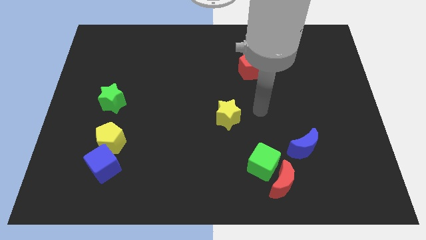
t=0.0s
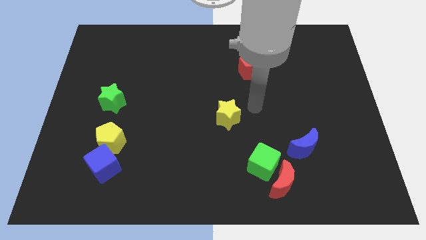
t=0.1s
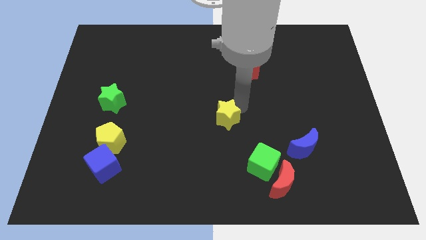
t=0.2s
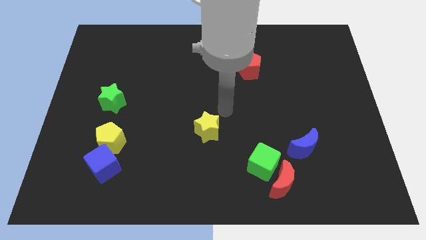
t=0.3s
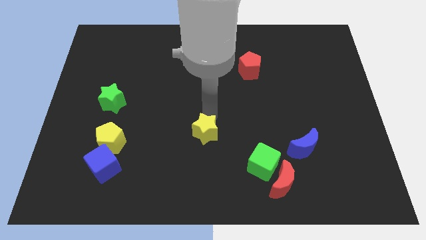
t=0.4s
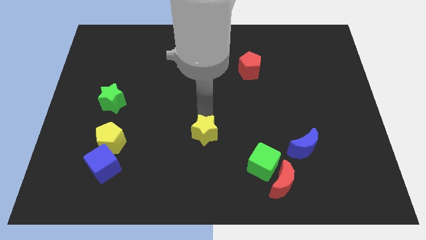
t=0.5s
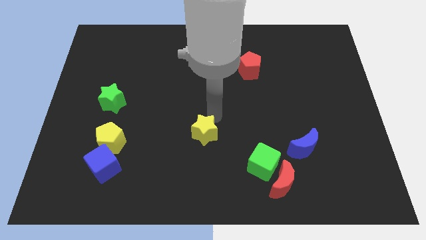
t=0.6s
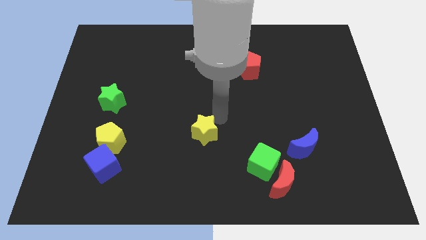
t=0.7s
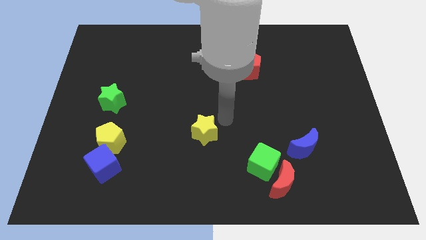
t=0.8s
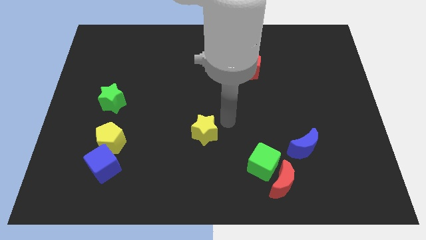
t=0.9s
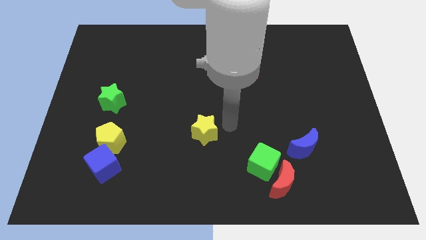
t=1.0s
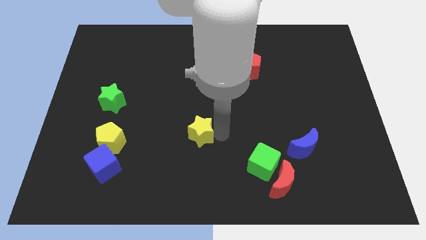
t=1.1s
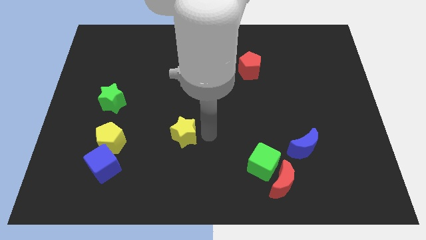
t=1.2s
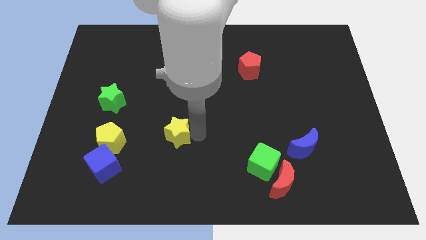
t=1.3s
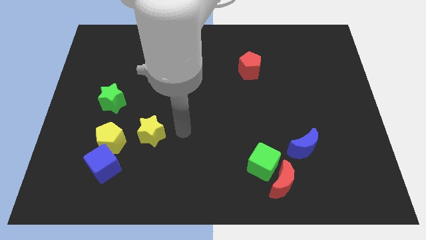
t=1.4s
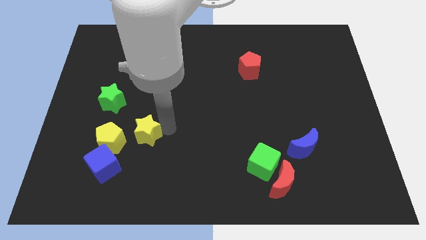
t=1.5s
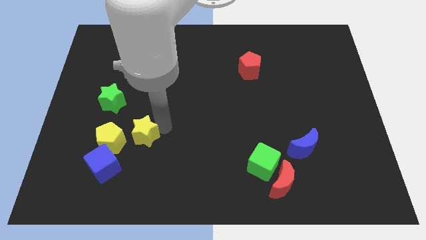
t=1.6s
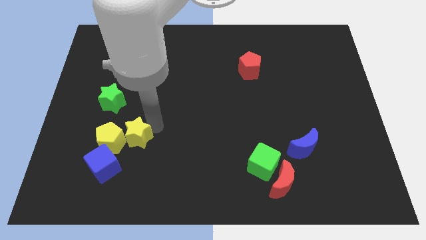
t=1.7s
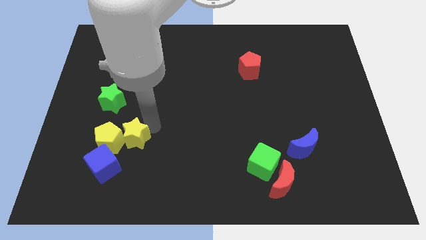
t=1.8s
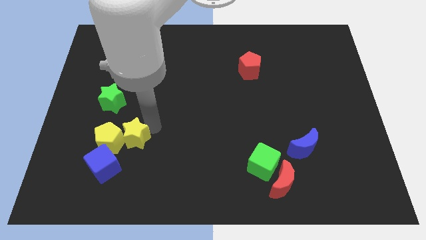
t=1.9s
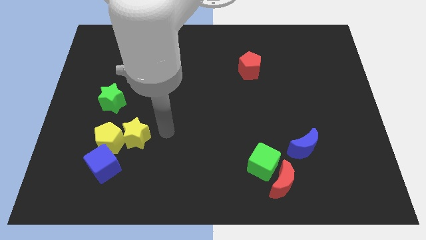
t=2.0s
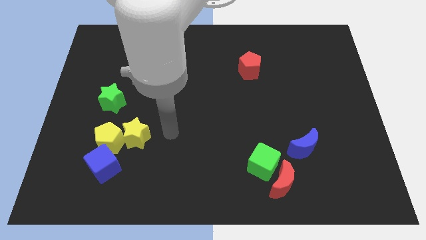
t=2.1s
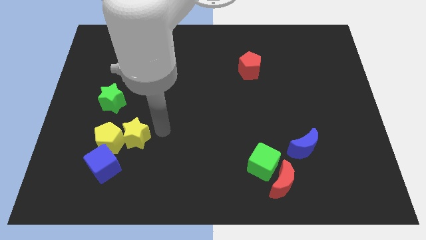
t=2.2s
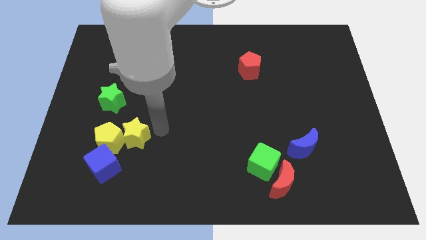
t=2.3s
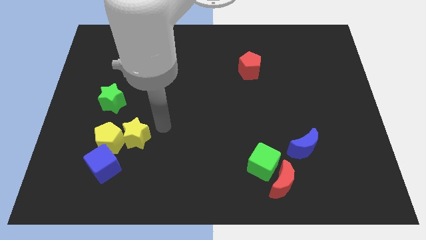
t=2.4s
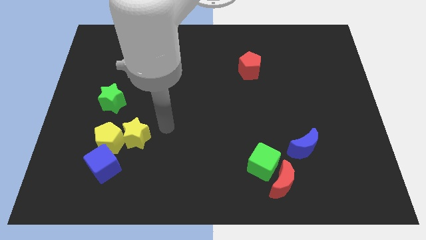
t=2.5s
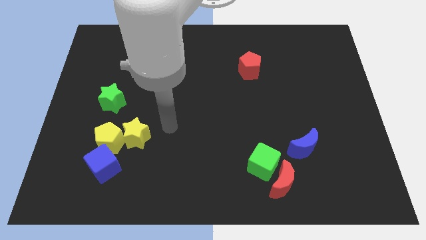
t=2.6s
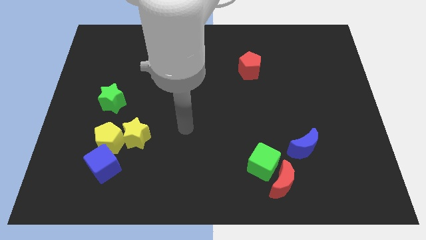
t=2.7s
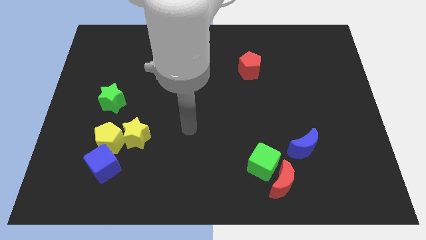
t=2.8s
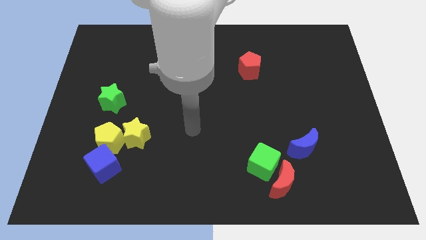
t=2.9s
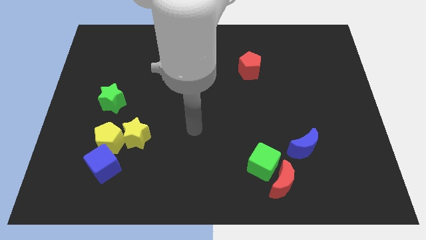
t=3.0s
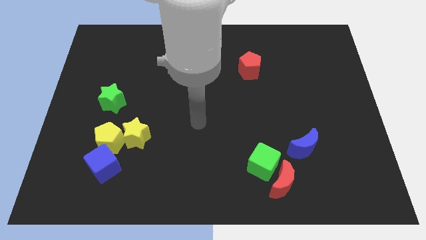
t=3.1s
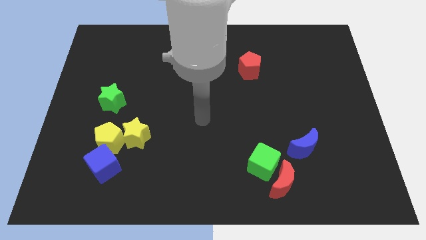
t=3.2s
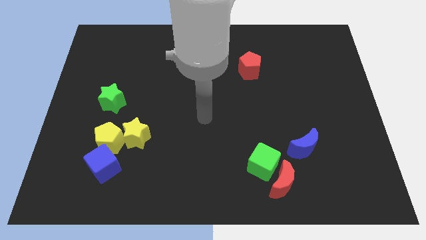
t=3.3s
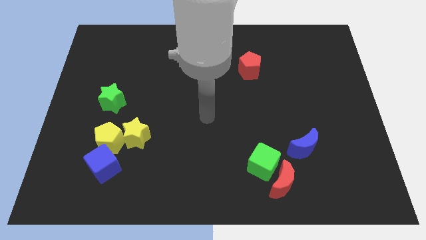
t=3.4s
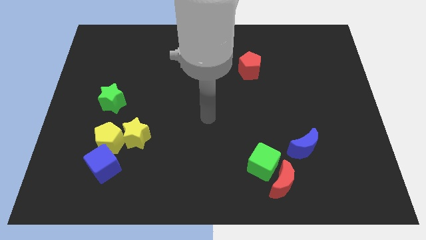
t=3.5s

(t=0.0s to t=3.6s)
push the yellow star into the yellow pentagon

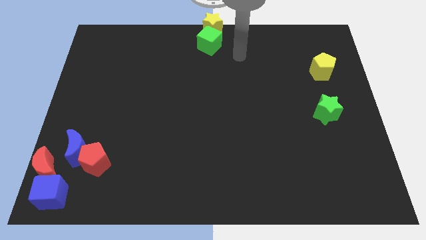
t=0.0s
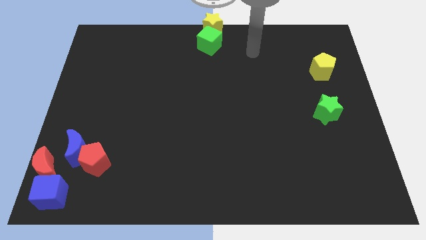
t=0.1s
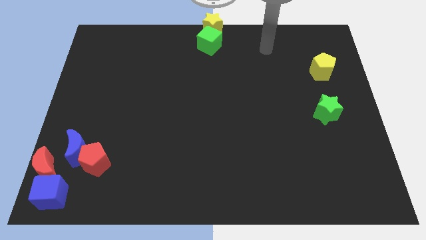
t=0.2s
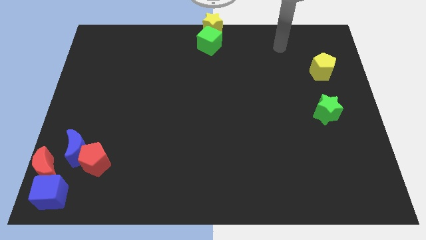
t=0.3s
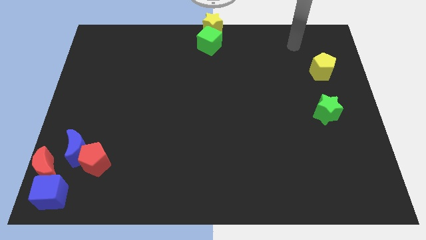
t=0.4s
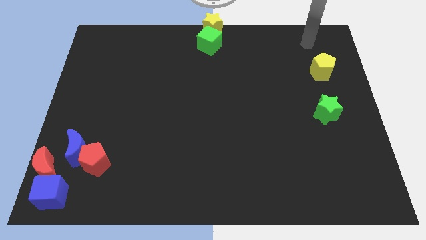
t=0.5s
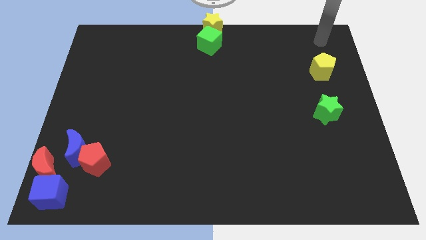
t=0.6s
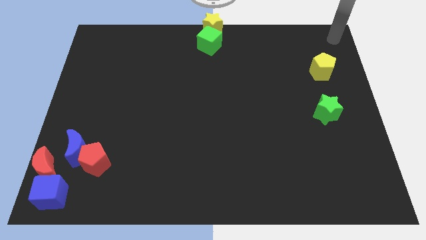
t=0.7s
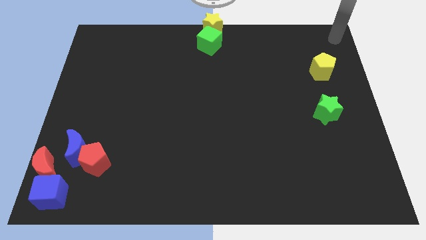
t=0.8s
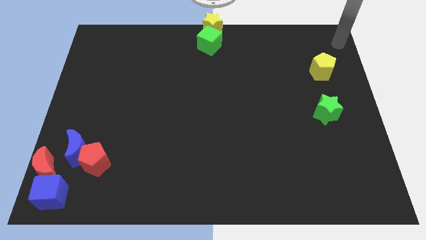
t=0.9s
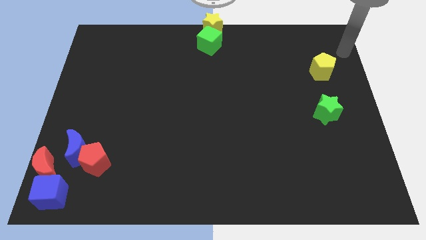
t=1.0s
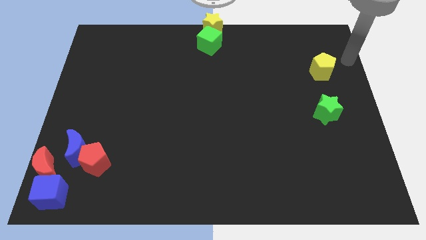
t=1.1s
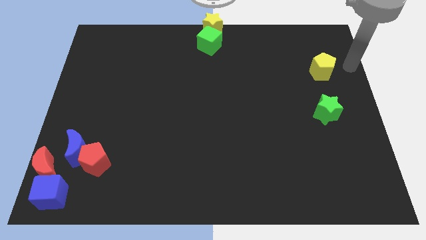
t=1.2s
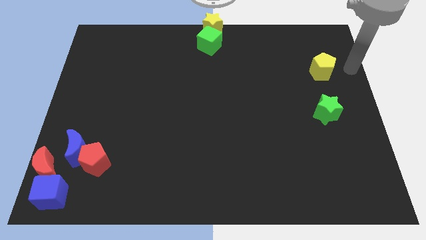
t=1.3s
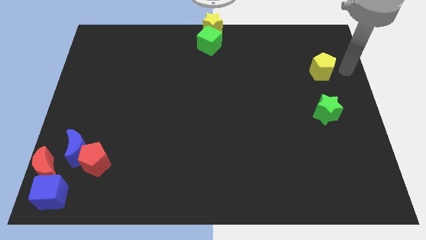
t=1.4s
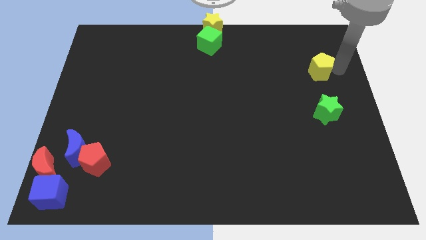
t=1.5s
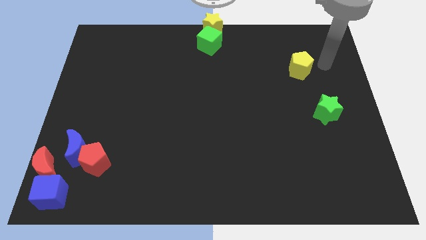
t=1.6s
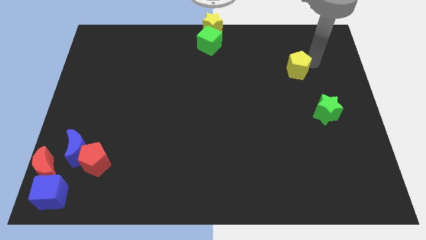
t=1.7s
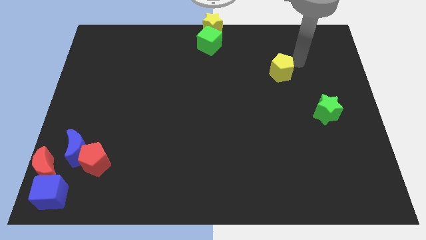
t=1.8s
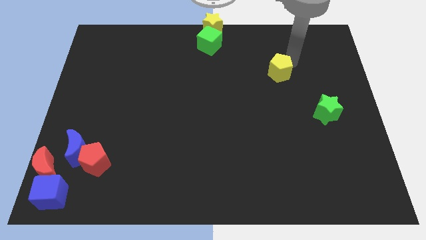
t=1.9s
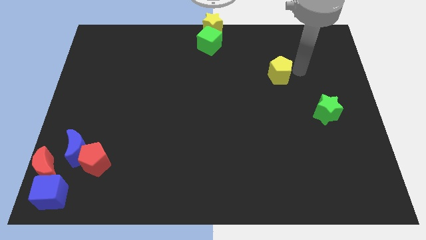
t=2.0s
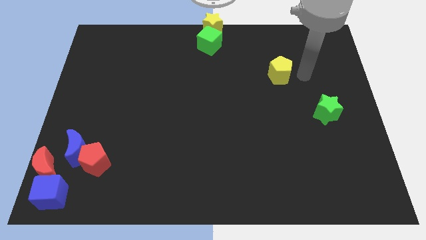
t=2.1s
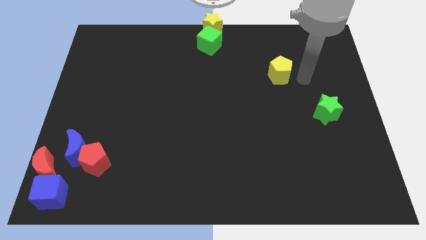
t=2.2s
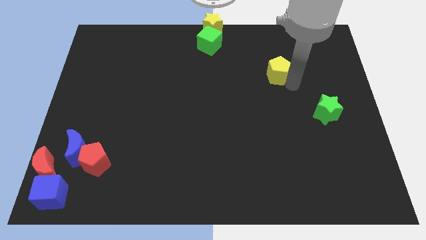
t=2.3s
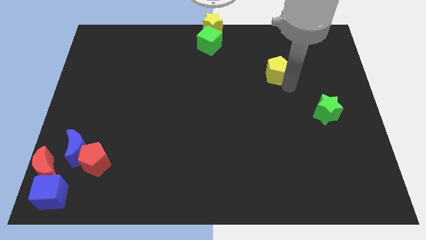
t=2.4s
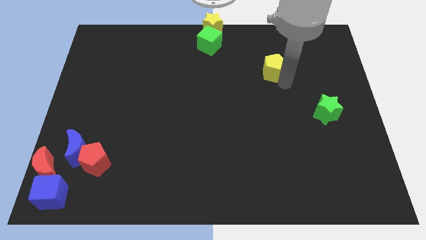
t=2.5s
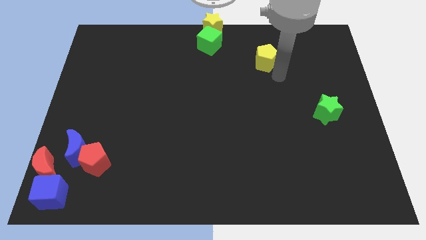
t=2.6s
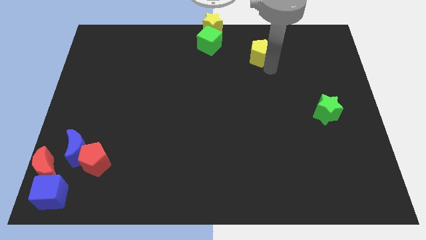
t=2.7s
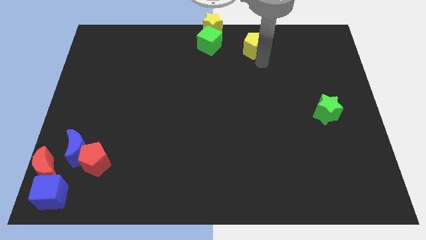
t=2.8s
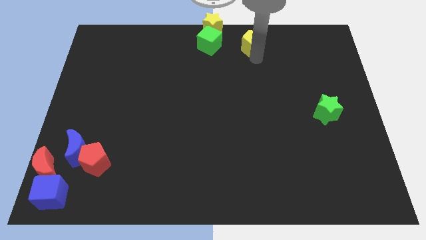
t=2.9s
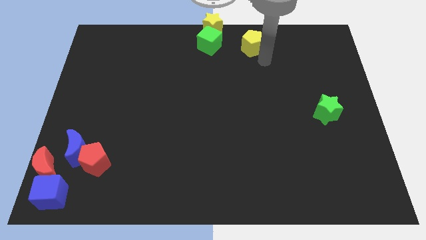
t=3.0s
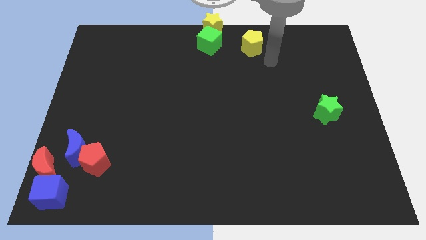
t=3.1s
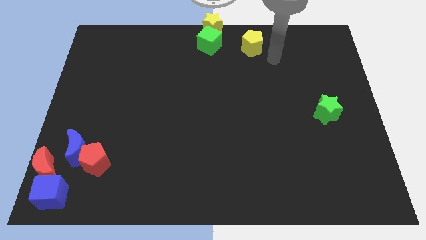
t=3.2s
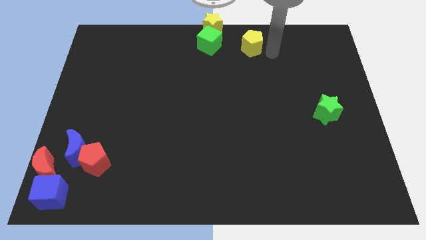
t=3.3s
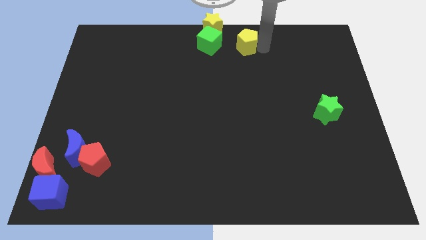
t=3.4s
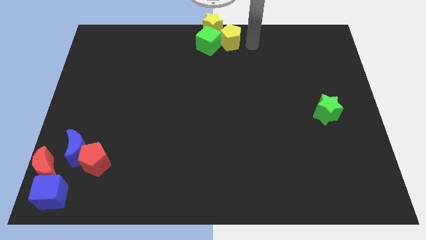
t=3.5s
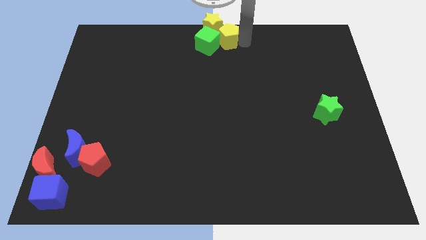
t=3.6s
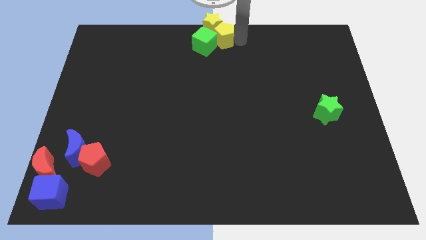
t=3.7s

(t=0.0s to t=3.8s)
push the yellow pentagon into the bottom of the yellow star

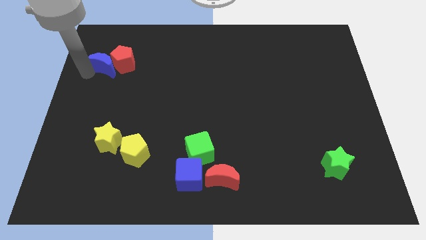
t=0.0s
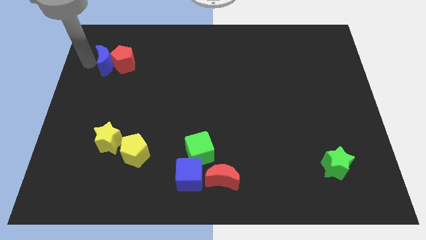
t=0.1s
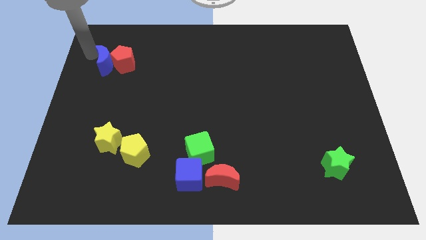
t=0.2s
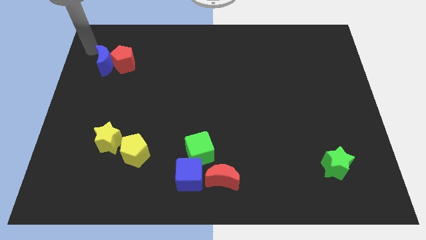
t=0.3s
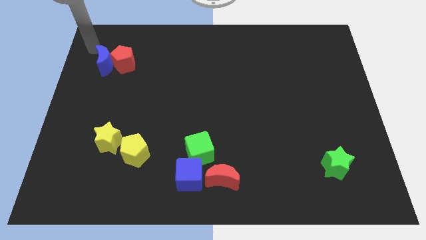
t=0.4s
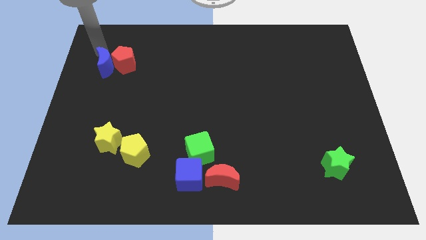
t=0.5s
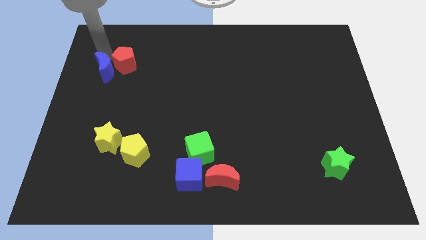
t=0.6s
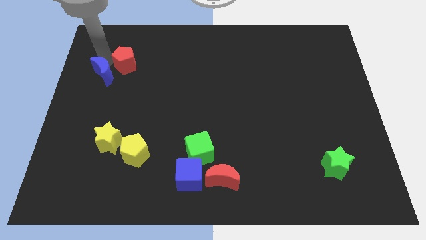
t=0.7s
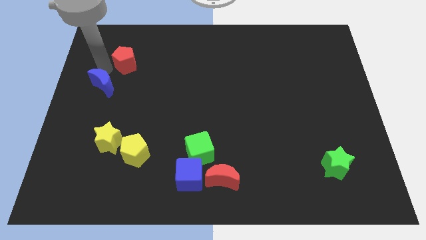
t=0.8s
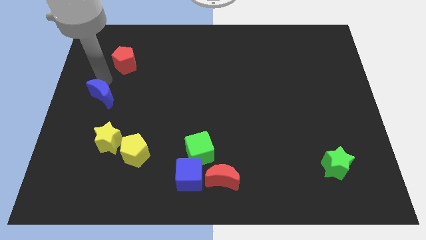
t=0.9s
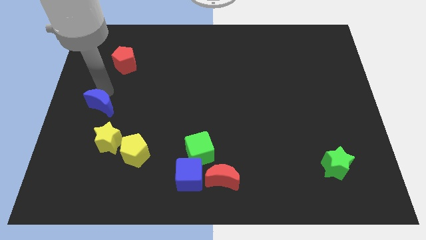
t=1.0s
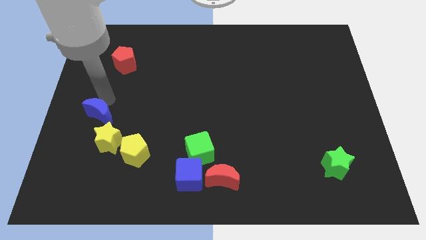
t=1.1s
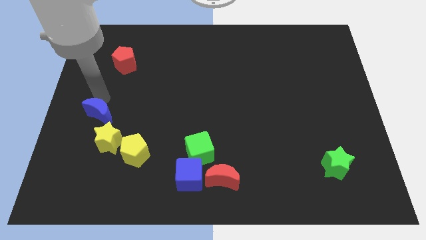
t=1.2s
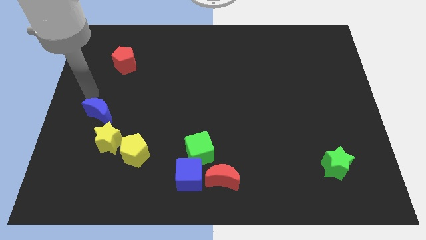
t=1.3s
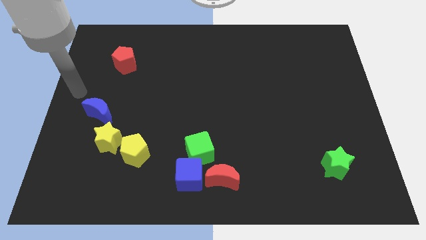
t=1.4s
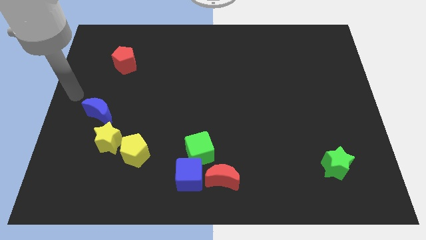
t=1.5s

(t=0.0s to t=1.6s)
separate the blue moon and the red pentagon
